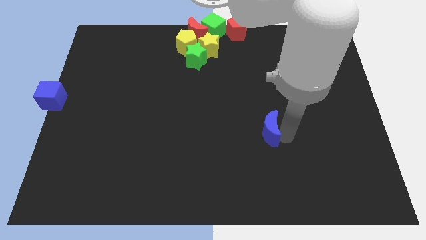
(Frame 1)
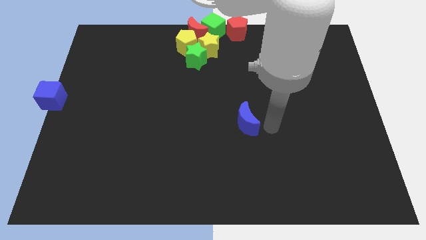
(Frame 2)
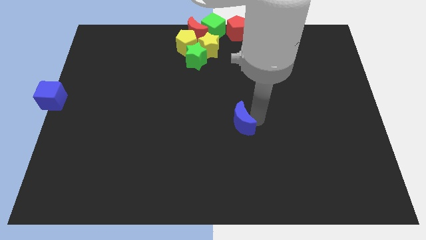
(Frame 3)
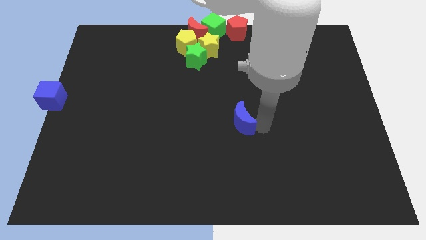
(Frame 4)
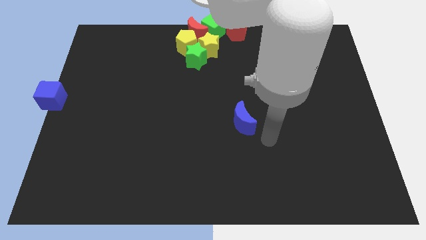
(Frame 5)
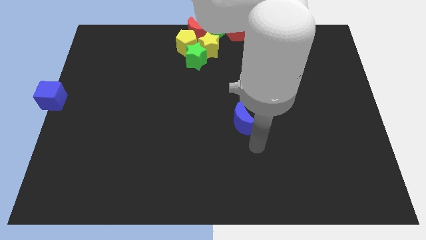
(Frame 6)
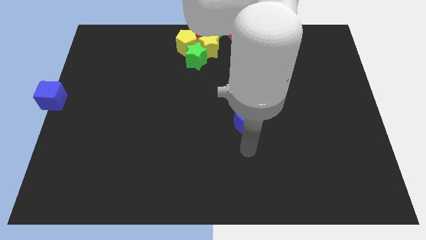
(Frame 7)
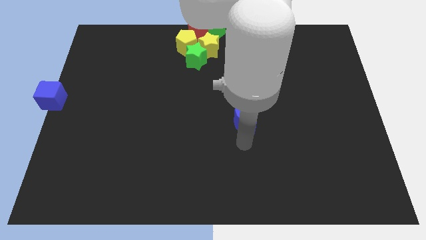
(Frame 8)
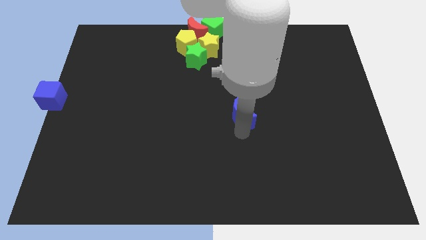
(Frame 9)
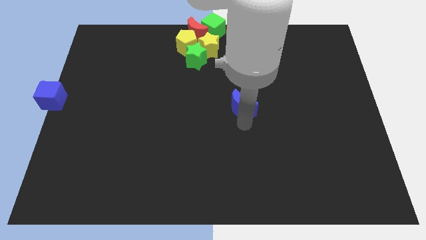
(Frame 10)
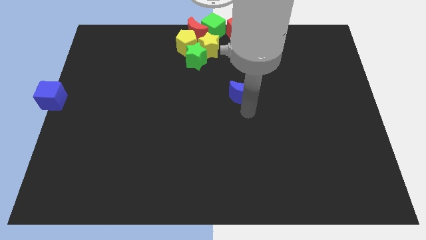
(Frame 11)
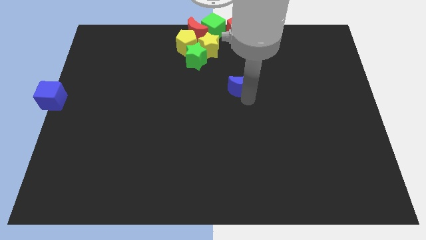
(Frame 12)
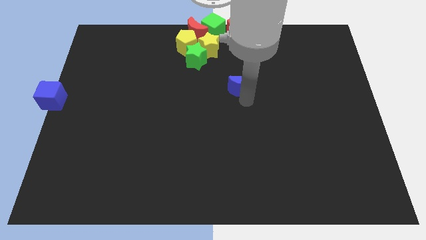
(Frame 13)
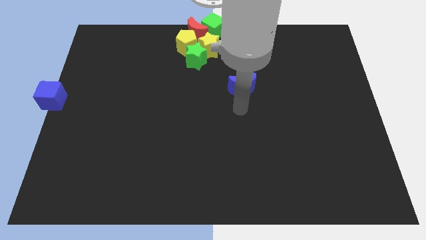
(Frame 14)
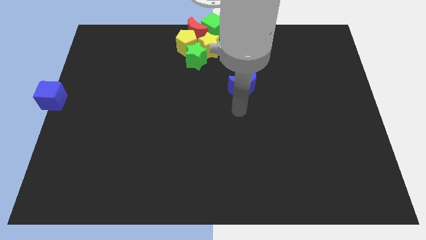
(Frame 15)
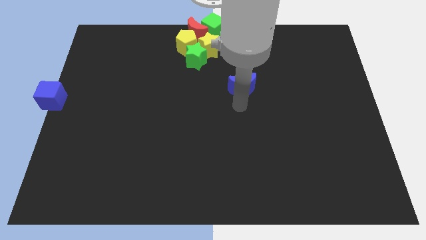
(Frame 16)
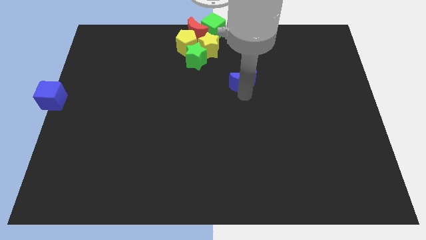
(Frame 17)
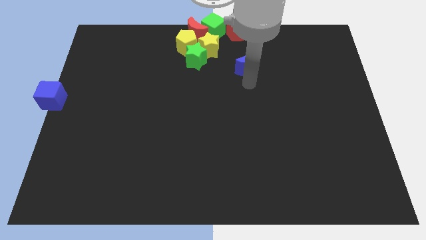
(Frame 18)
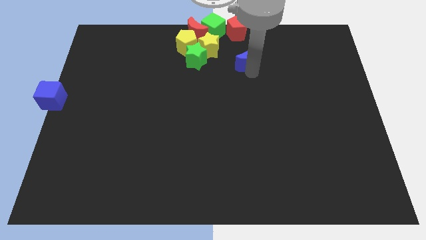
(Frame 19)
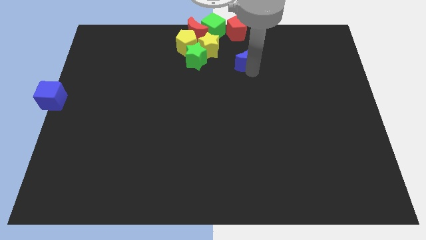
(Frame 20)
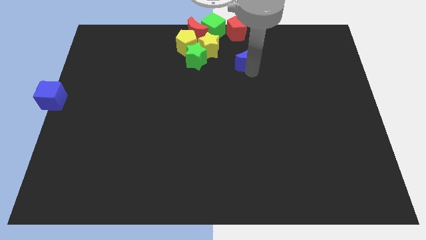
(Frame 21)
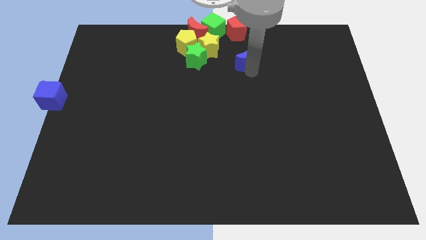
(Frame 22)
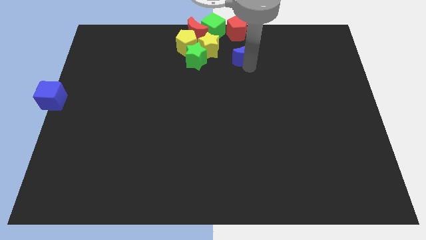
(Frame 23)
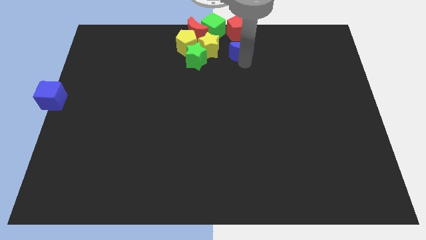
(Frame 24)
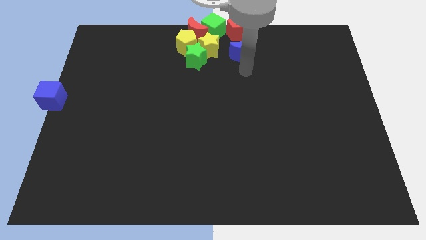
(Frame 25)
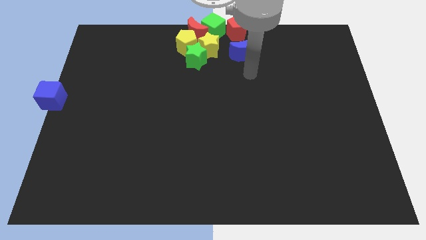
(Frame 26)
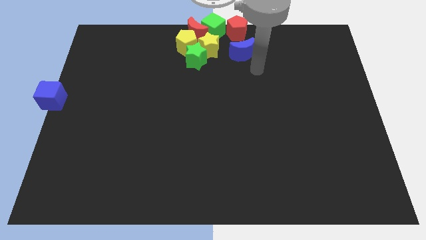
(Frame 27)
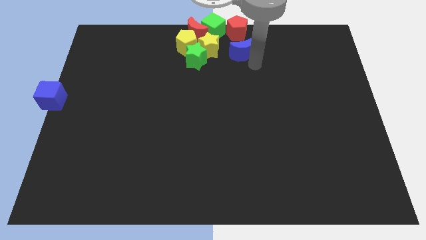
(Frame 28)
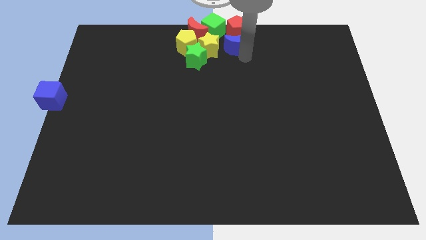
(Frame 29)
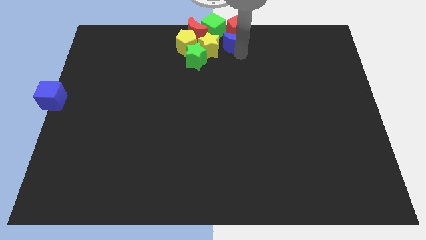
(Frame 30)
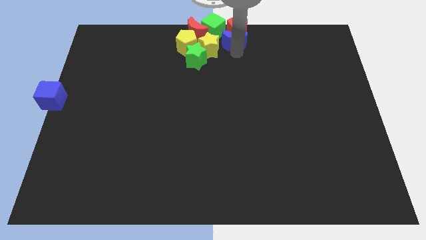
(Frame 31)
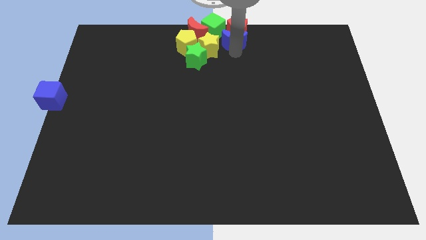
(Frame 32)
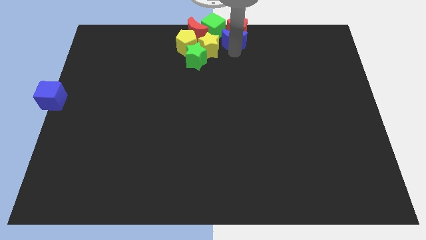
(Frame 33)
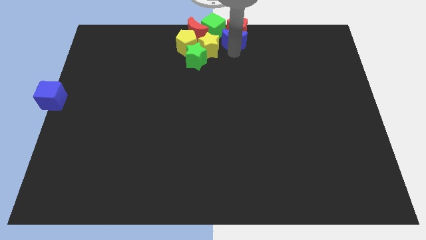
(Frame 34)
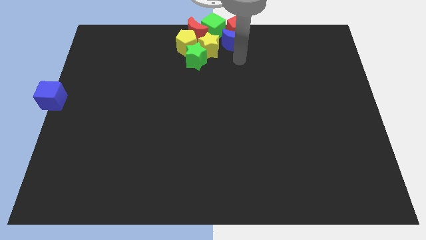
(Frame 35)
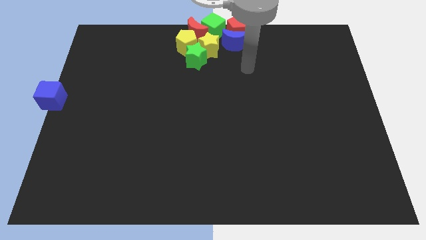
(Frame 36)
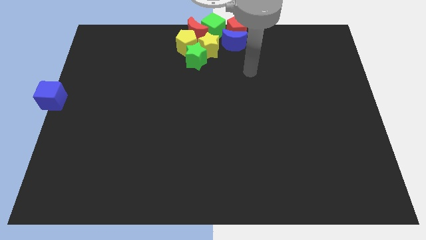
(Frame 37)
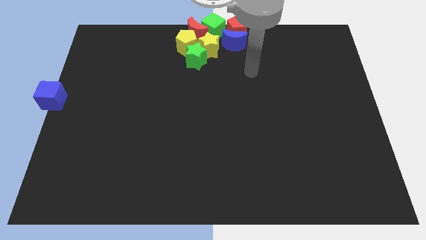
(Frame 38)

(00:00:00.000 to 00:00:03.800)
place the blue moon below into red pentagon

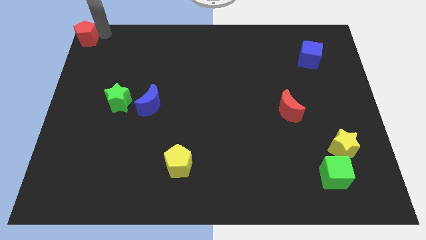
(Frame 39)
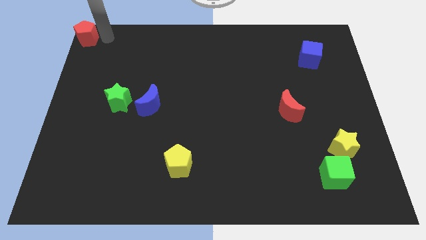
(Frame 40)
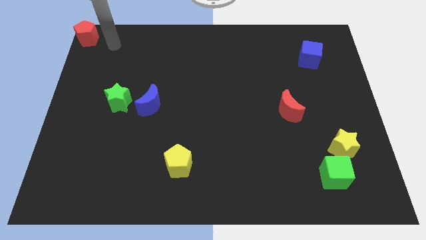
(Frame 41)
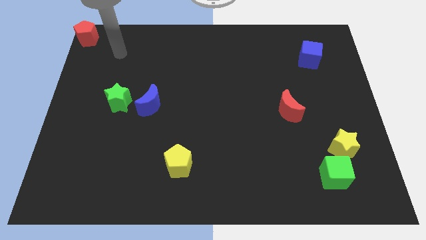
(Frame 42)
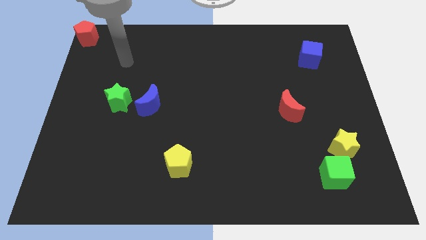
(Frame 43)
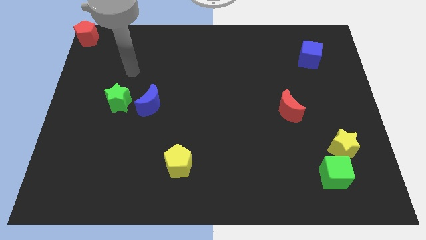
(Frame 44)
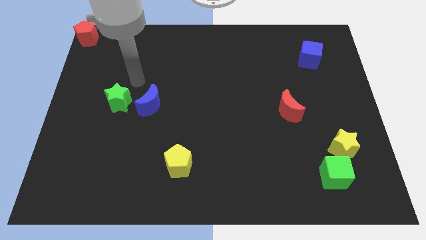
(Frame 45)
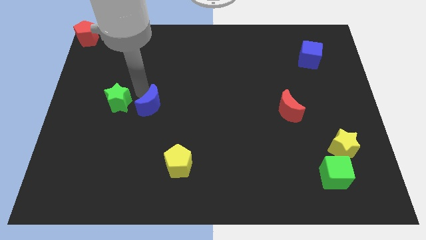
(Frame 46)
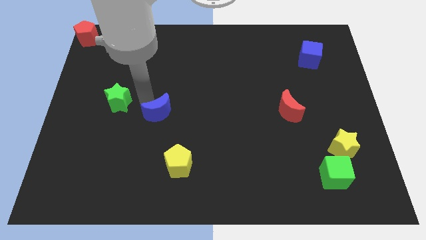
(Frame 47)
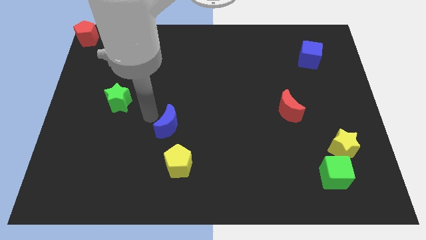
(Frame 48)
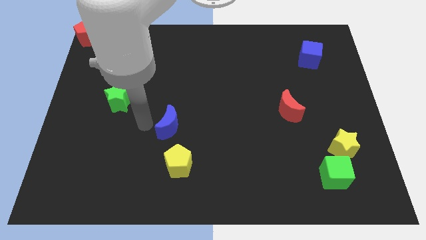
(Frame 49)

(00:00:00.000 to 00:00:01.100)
push the blue crescent towards the yellow pentagon

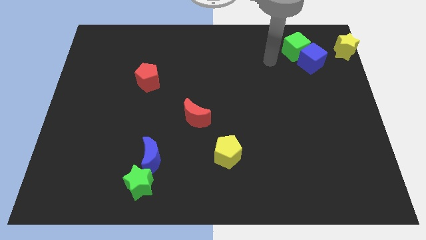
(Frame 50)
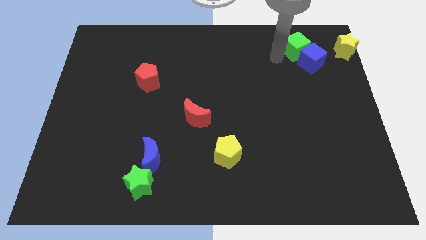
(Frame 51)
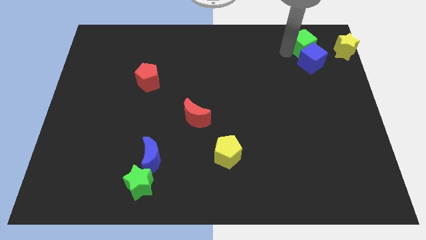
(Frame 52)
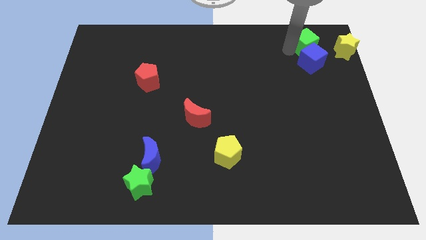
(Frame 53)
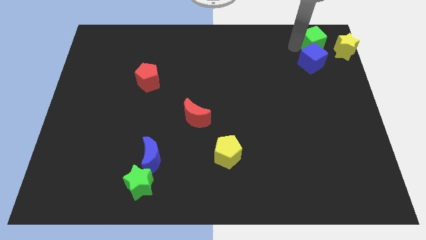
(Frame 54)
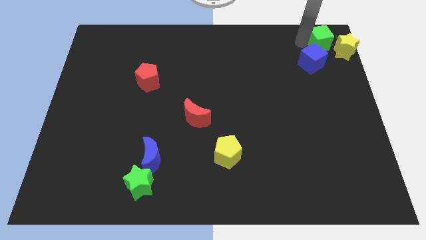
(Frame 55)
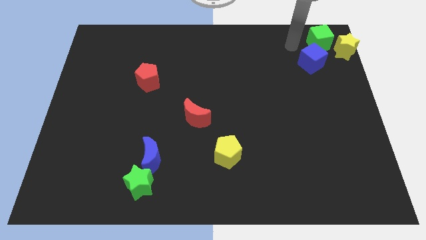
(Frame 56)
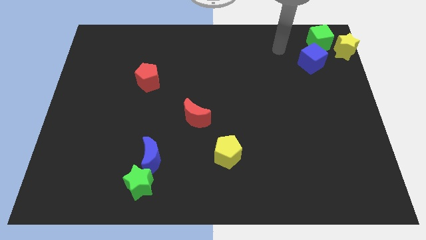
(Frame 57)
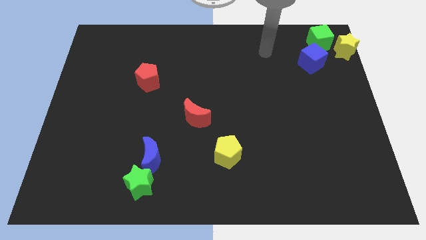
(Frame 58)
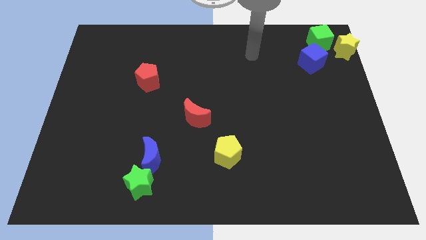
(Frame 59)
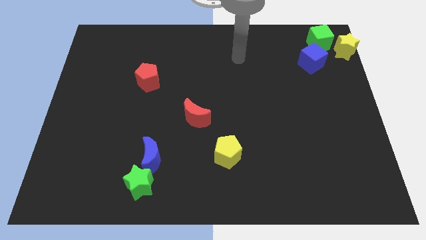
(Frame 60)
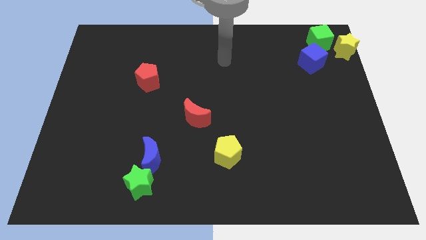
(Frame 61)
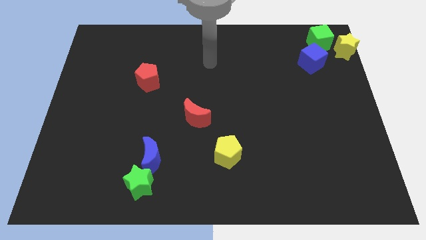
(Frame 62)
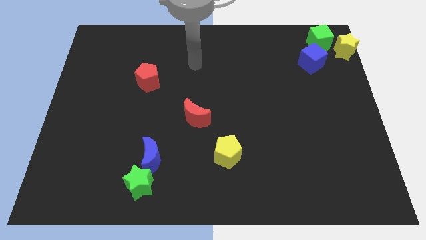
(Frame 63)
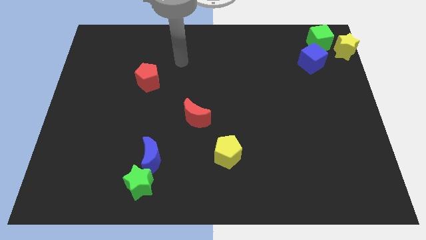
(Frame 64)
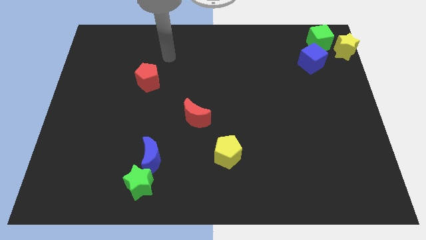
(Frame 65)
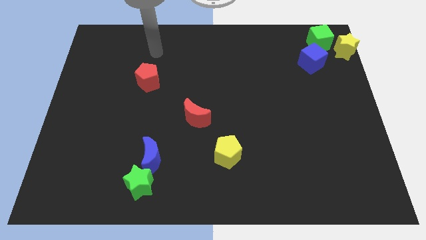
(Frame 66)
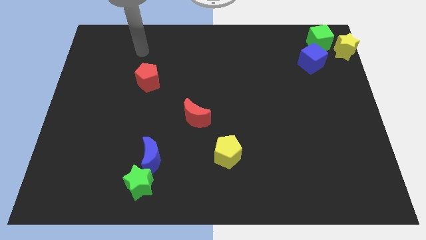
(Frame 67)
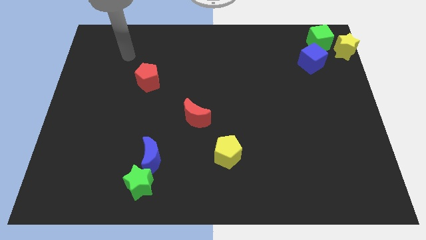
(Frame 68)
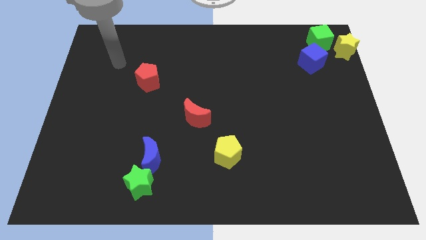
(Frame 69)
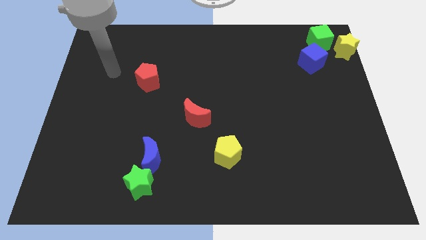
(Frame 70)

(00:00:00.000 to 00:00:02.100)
push the green cube to the top right of the board

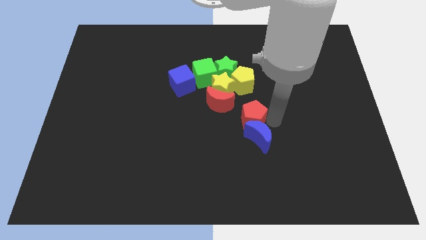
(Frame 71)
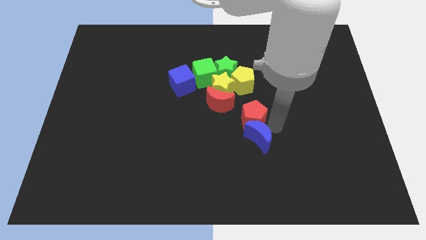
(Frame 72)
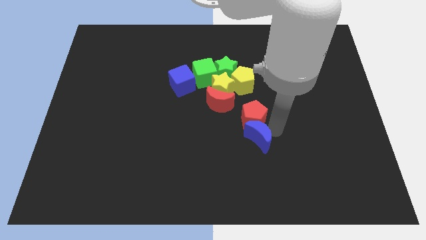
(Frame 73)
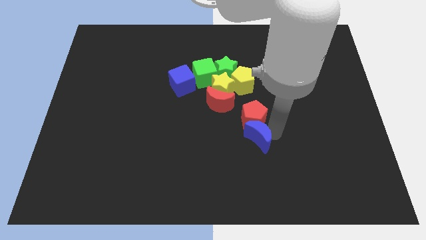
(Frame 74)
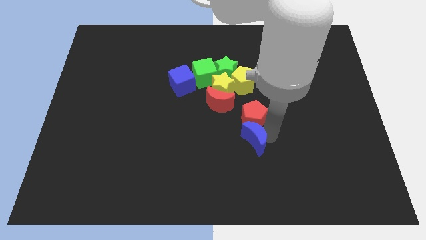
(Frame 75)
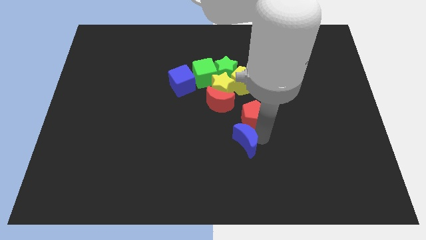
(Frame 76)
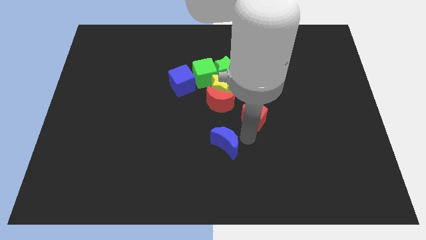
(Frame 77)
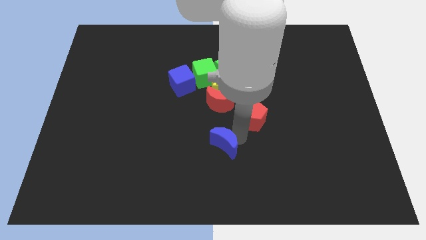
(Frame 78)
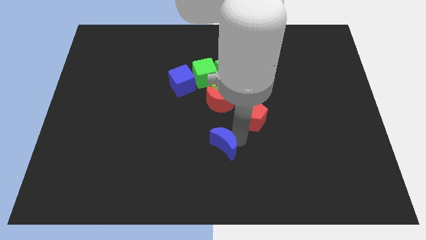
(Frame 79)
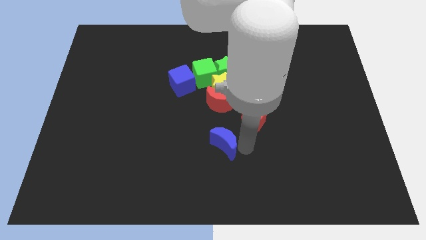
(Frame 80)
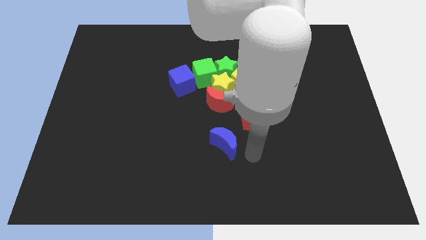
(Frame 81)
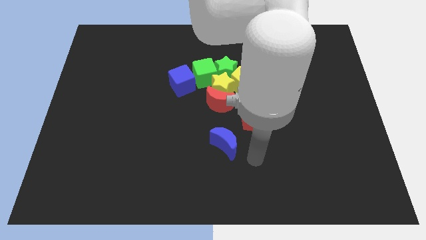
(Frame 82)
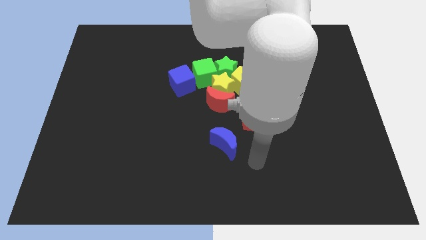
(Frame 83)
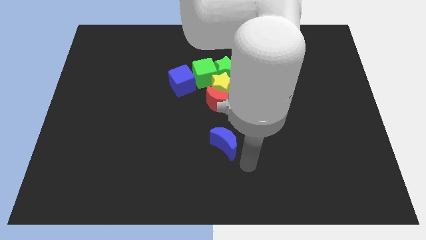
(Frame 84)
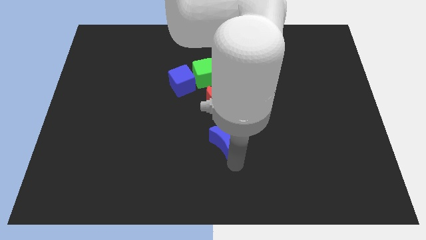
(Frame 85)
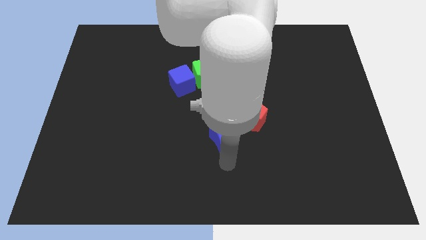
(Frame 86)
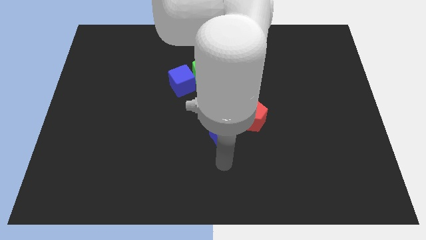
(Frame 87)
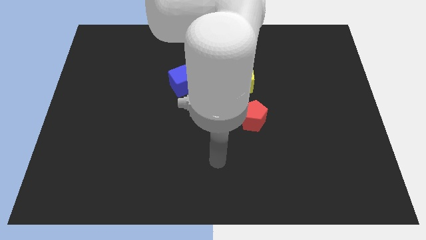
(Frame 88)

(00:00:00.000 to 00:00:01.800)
move the blue moon vertically below the red moon

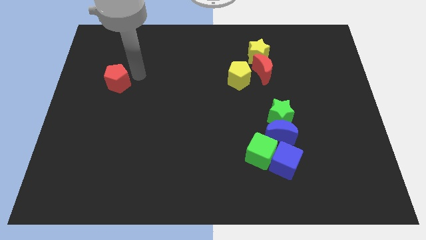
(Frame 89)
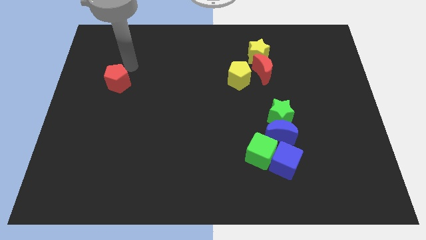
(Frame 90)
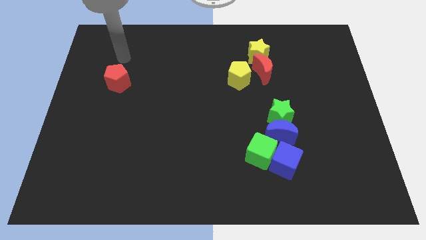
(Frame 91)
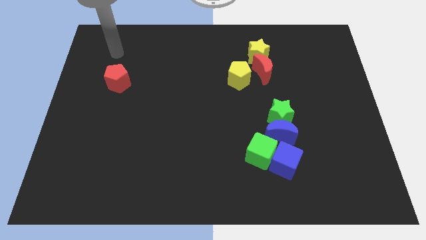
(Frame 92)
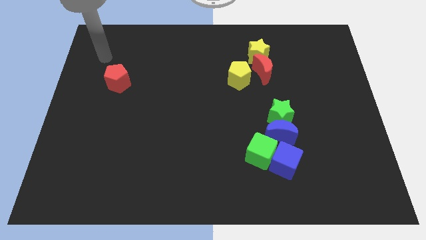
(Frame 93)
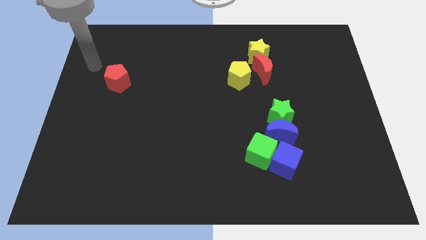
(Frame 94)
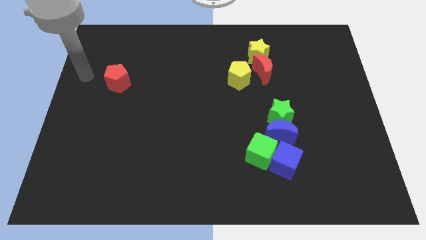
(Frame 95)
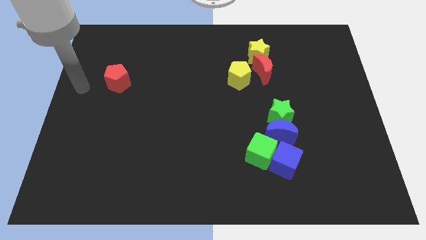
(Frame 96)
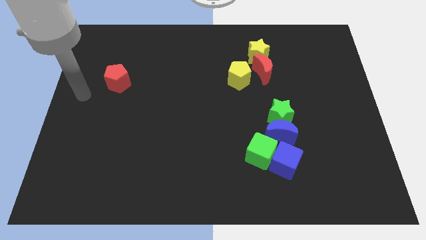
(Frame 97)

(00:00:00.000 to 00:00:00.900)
move your arm towards the left center of the board
